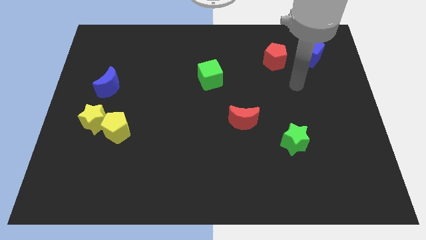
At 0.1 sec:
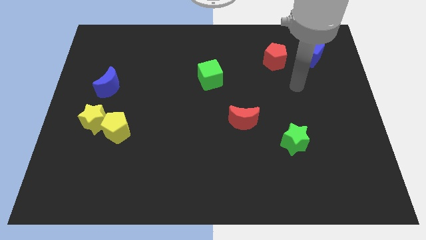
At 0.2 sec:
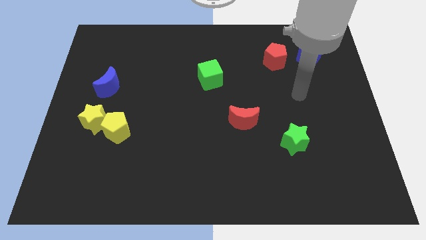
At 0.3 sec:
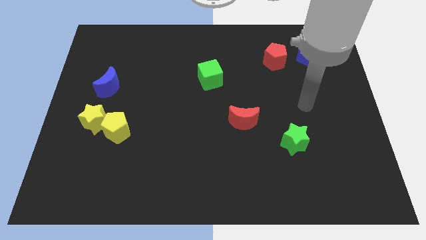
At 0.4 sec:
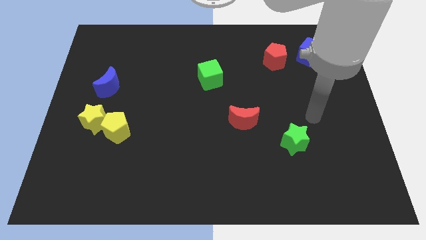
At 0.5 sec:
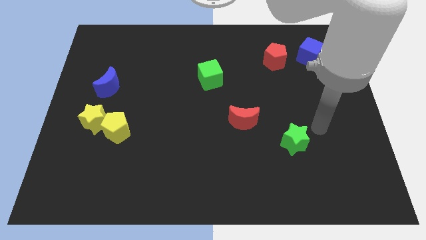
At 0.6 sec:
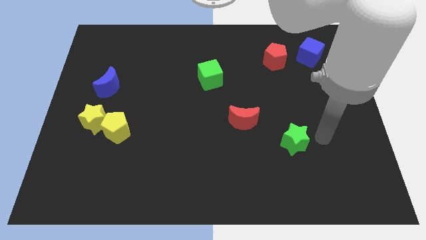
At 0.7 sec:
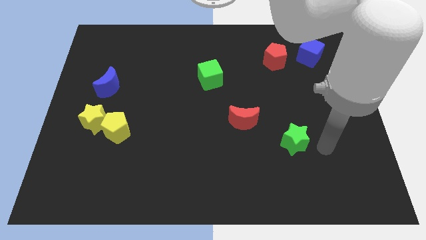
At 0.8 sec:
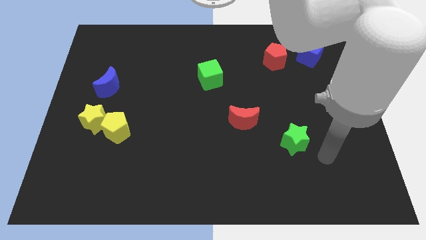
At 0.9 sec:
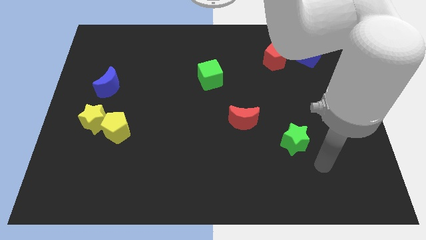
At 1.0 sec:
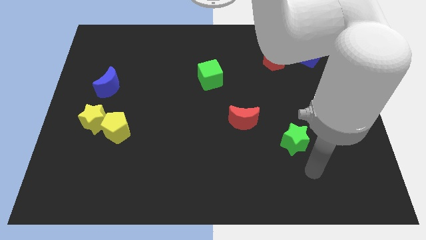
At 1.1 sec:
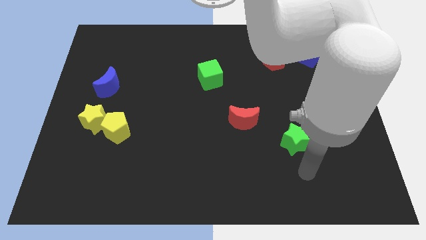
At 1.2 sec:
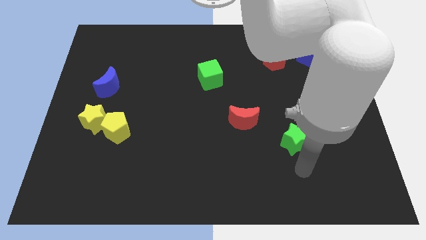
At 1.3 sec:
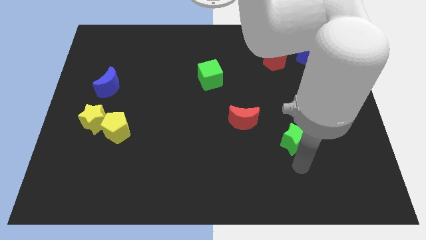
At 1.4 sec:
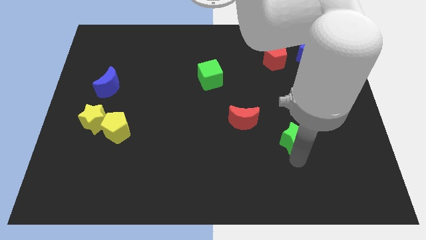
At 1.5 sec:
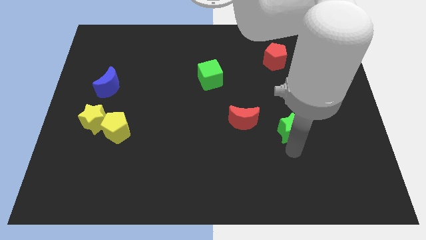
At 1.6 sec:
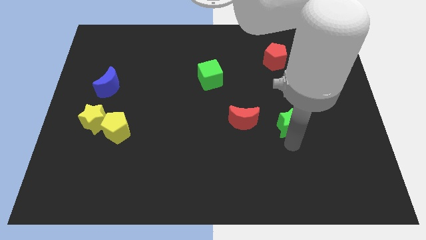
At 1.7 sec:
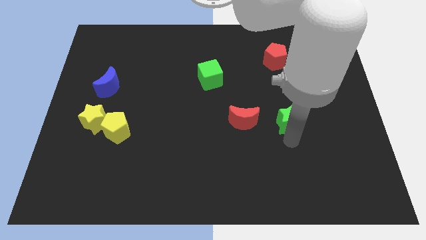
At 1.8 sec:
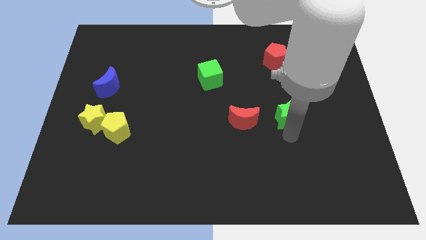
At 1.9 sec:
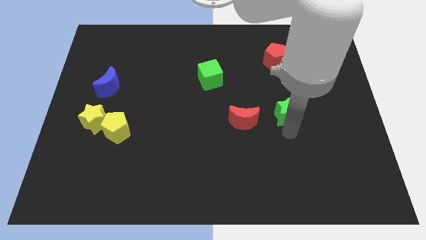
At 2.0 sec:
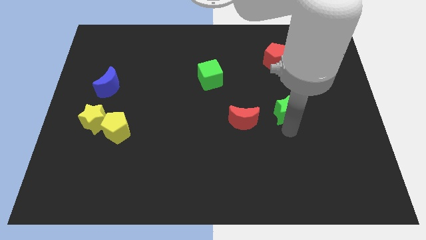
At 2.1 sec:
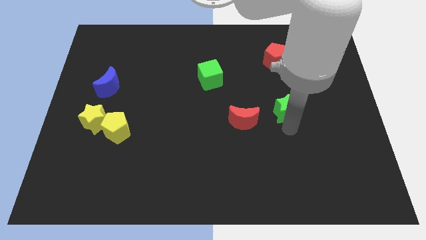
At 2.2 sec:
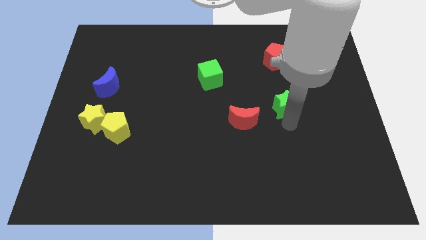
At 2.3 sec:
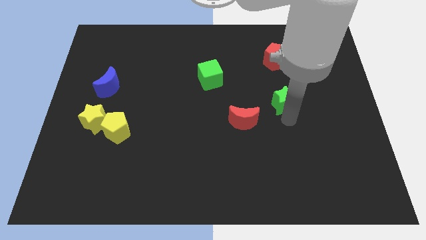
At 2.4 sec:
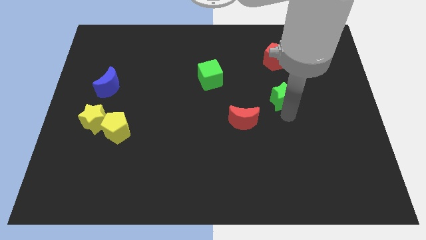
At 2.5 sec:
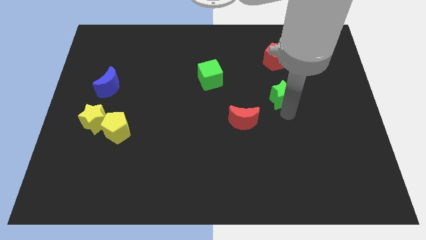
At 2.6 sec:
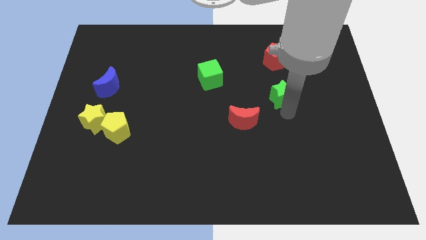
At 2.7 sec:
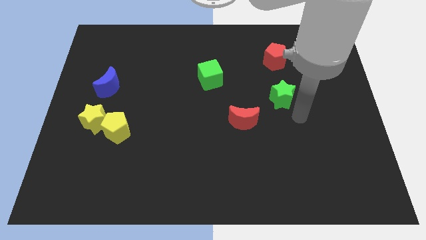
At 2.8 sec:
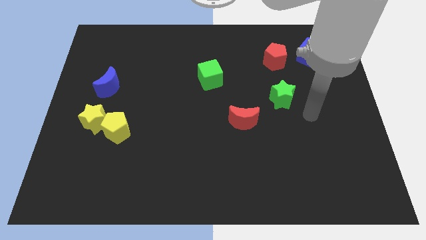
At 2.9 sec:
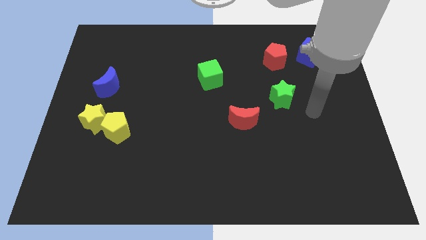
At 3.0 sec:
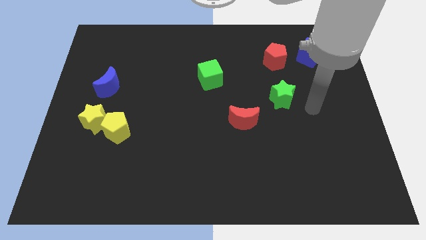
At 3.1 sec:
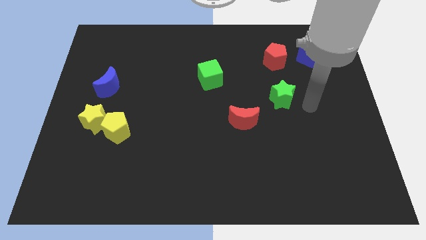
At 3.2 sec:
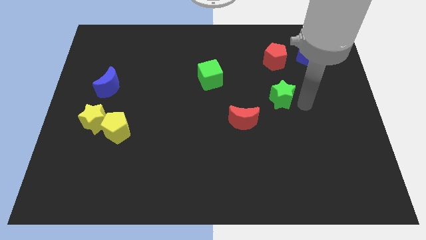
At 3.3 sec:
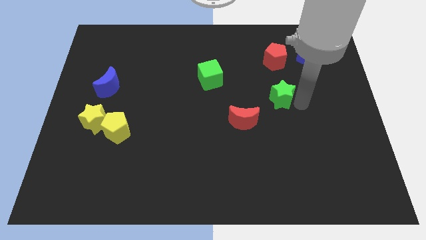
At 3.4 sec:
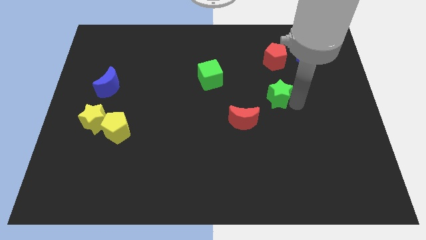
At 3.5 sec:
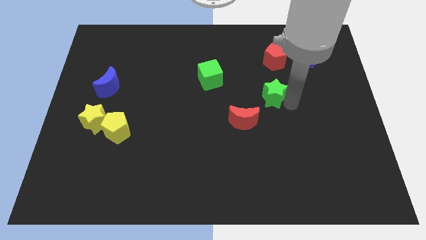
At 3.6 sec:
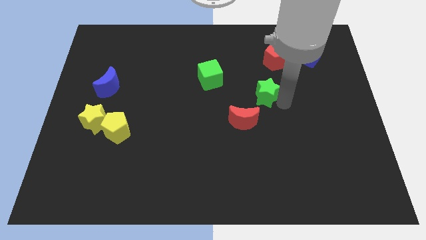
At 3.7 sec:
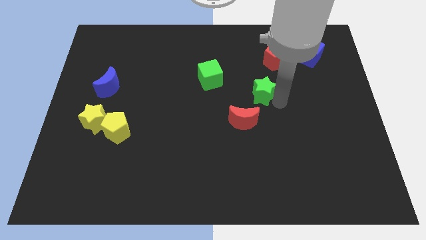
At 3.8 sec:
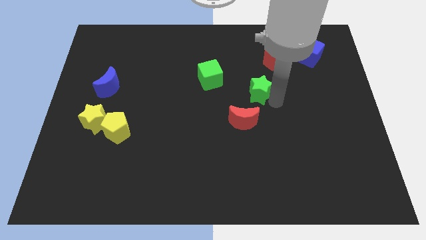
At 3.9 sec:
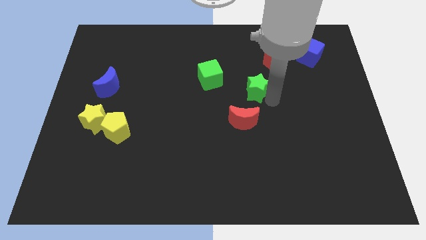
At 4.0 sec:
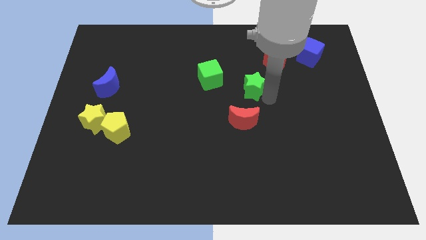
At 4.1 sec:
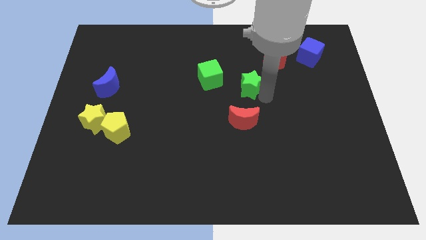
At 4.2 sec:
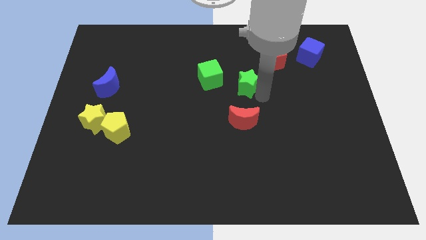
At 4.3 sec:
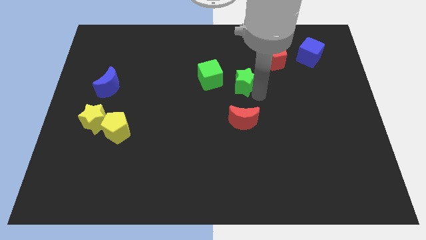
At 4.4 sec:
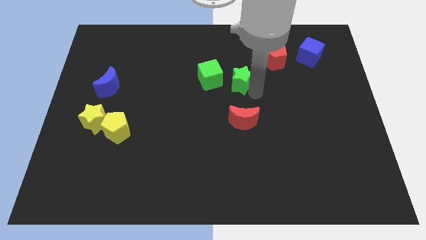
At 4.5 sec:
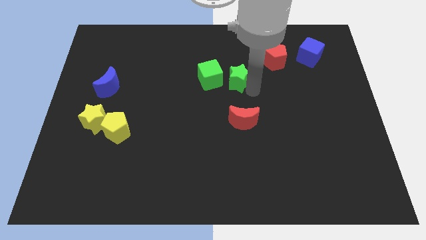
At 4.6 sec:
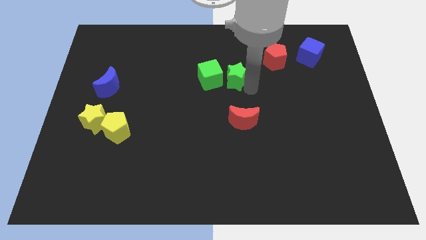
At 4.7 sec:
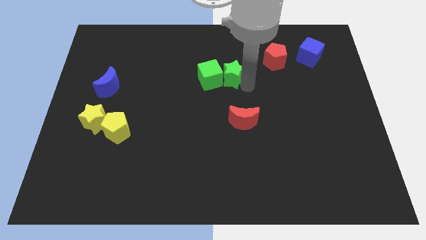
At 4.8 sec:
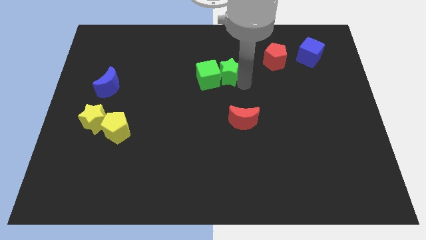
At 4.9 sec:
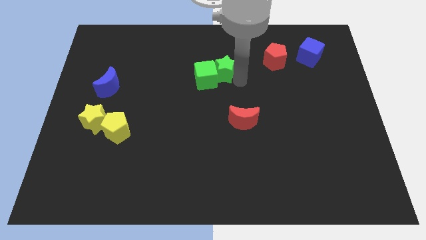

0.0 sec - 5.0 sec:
put the green star to the green cube

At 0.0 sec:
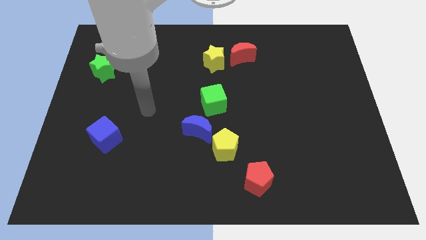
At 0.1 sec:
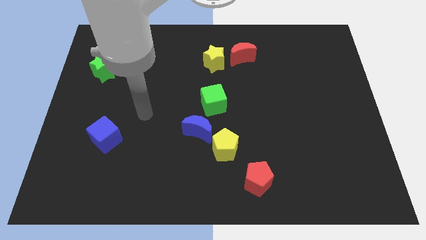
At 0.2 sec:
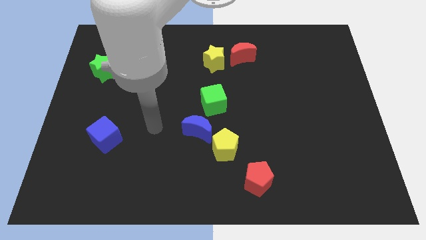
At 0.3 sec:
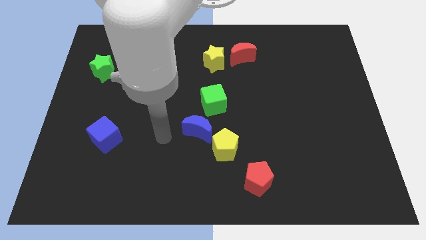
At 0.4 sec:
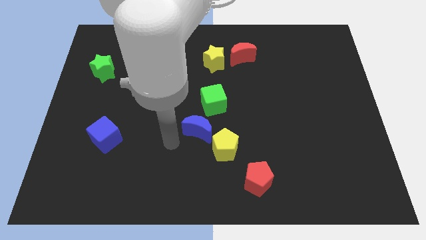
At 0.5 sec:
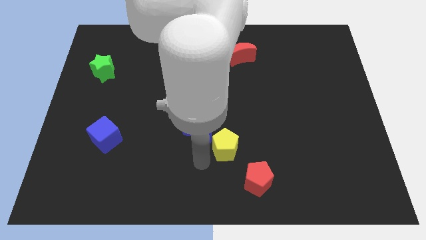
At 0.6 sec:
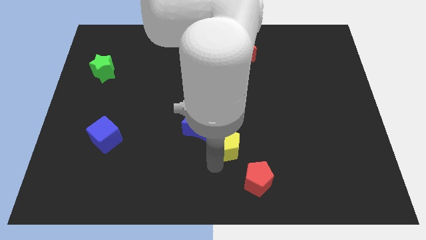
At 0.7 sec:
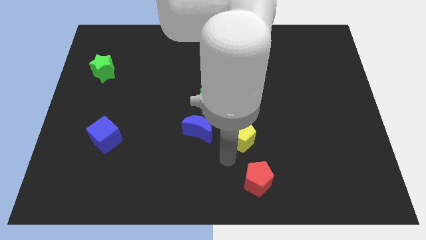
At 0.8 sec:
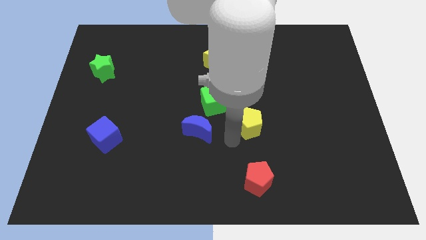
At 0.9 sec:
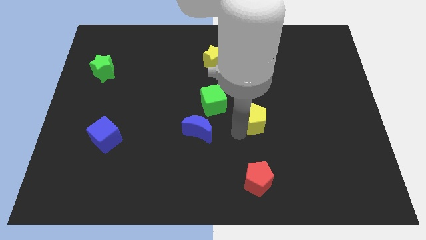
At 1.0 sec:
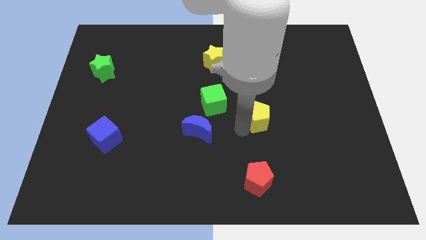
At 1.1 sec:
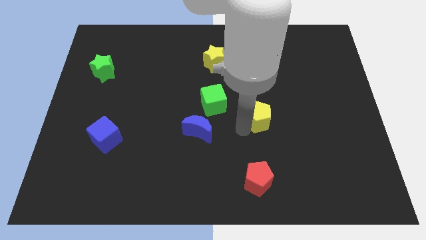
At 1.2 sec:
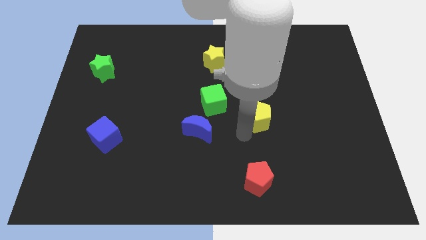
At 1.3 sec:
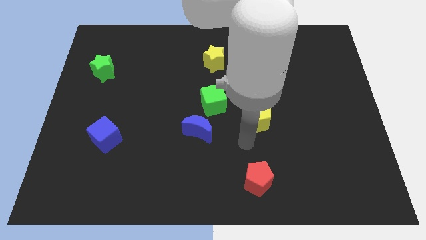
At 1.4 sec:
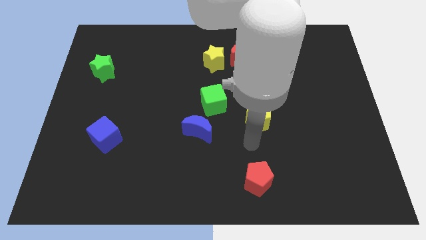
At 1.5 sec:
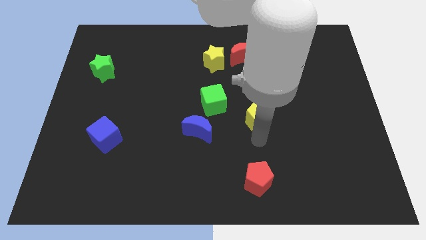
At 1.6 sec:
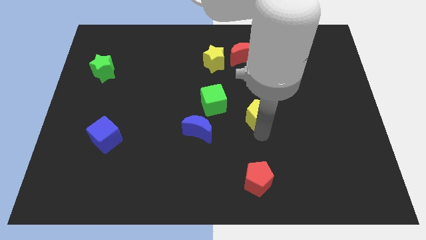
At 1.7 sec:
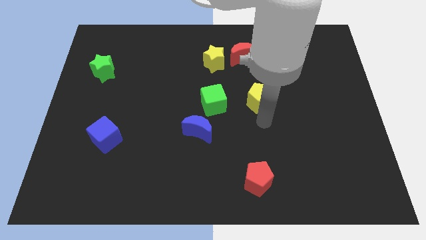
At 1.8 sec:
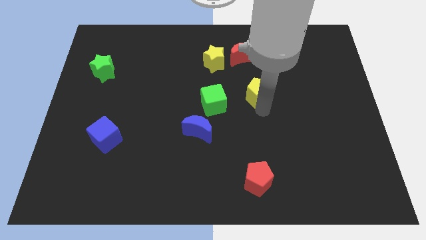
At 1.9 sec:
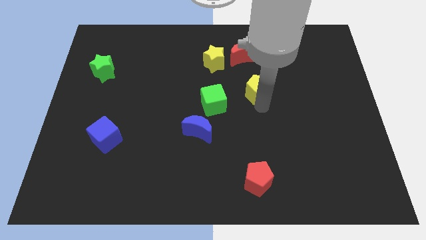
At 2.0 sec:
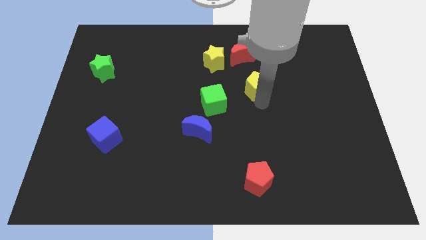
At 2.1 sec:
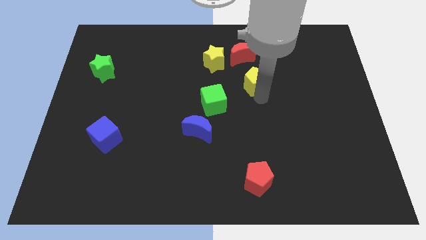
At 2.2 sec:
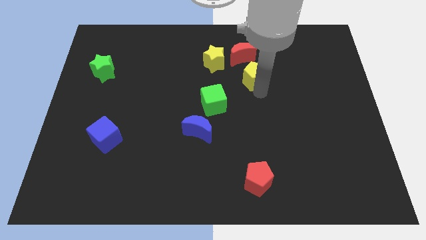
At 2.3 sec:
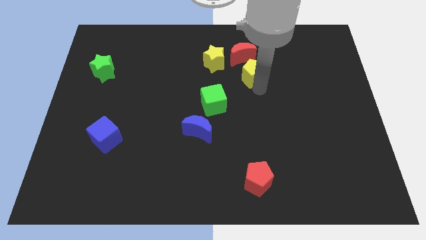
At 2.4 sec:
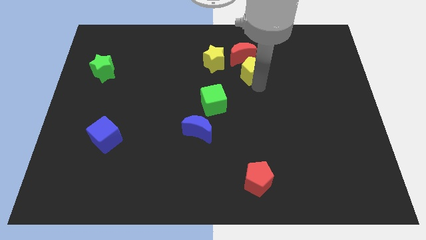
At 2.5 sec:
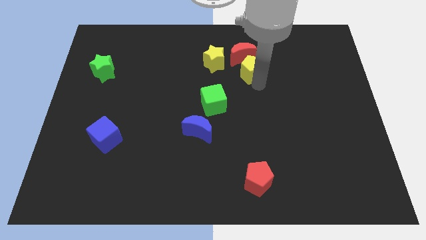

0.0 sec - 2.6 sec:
move the yellow pentagon to the red moon

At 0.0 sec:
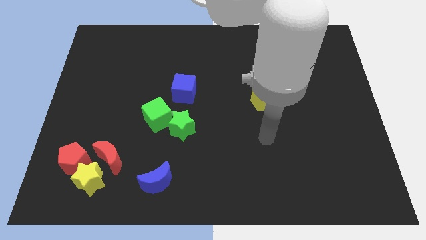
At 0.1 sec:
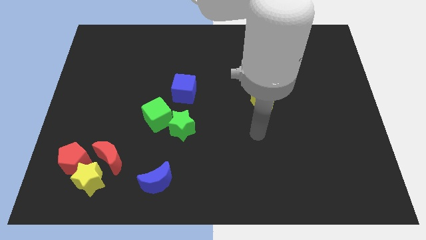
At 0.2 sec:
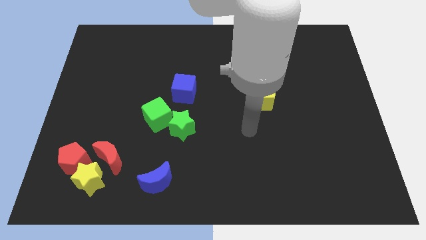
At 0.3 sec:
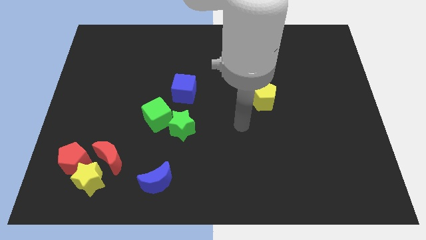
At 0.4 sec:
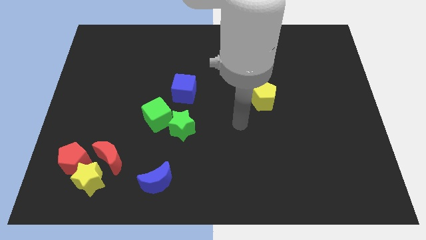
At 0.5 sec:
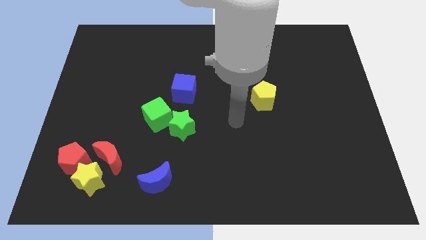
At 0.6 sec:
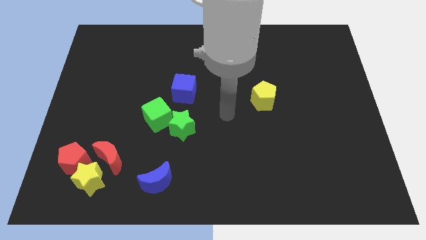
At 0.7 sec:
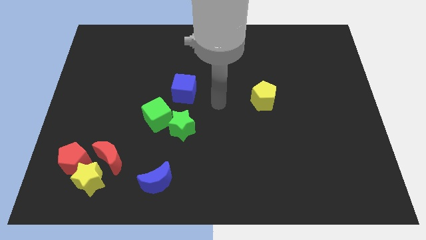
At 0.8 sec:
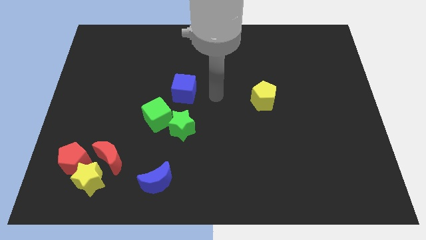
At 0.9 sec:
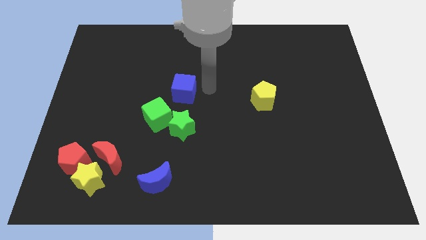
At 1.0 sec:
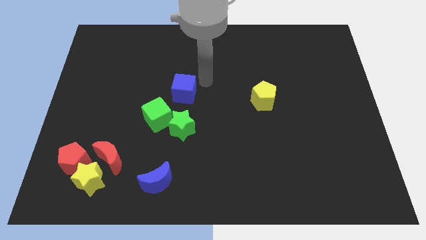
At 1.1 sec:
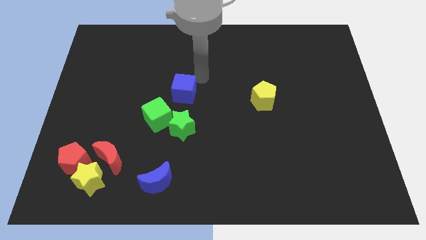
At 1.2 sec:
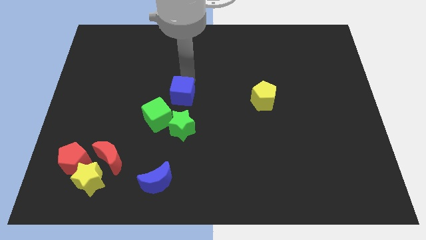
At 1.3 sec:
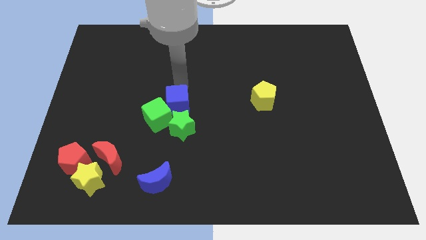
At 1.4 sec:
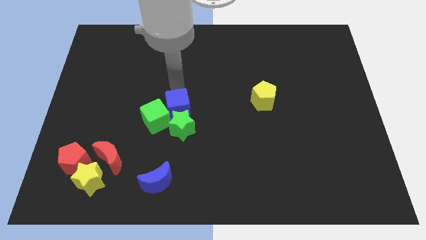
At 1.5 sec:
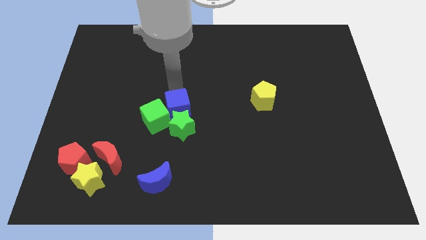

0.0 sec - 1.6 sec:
put the blue cube to the green cube
